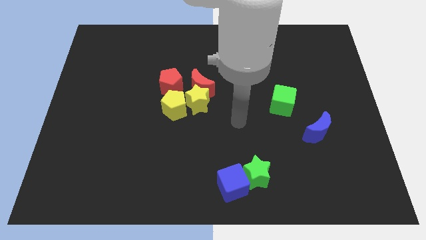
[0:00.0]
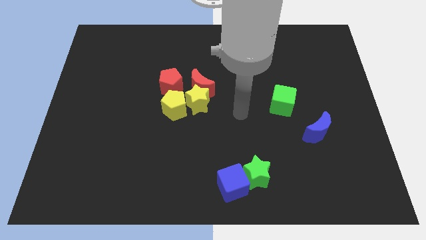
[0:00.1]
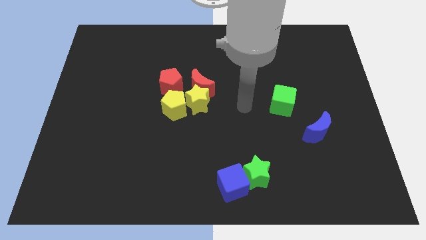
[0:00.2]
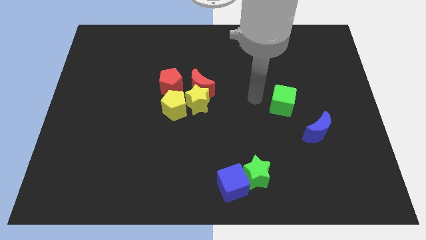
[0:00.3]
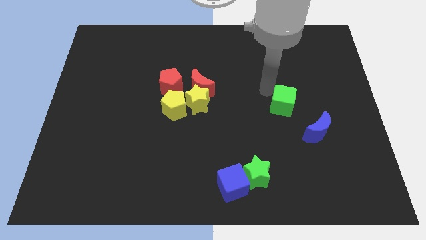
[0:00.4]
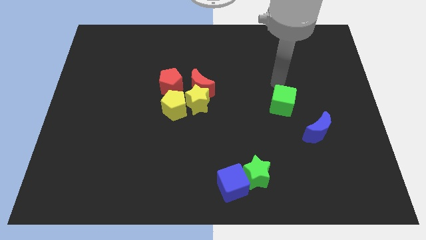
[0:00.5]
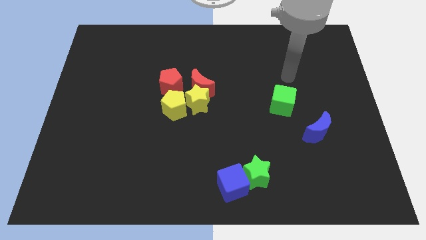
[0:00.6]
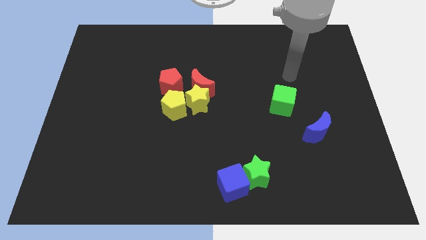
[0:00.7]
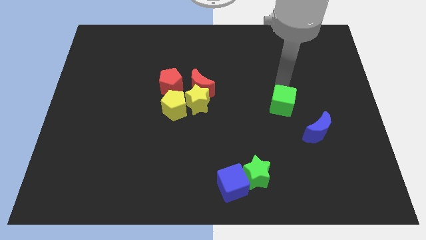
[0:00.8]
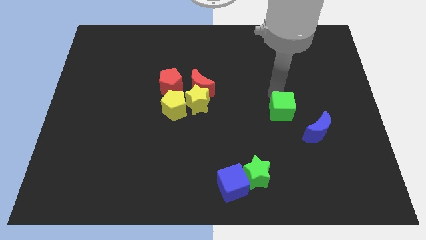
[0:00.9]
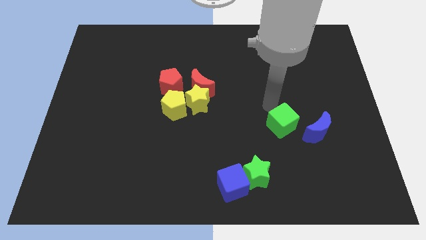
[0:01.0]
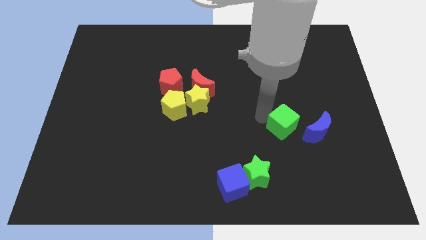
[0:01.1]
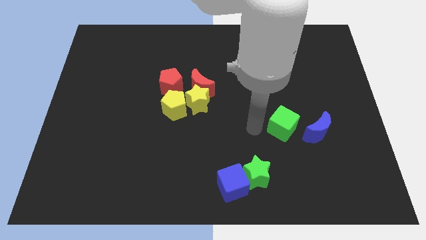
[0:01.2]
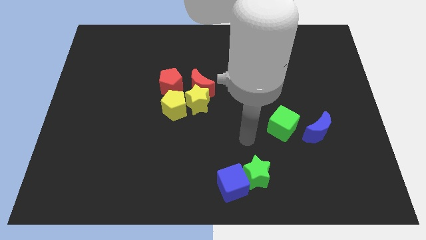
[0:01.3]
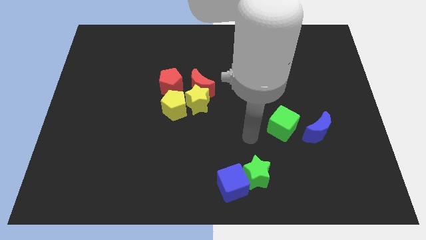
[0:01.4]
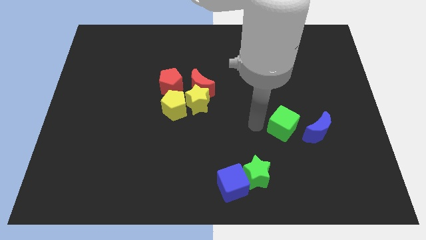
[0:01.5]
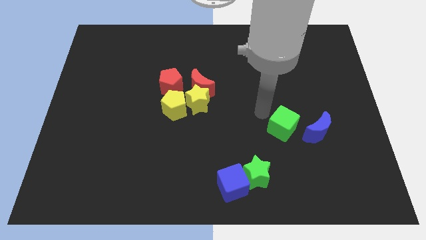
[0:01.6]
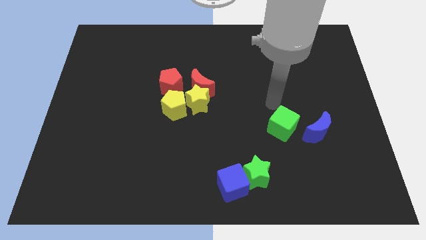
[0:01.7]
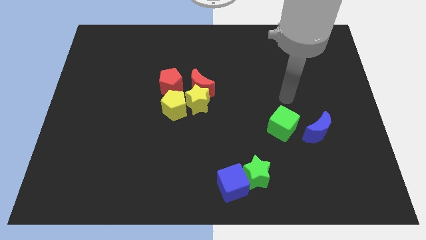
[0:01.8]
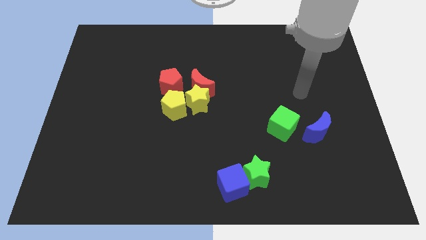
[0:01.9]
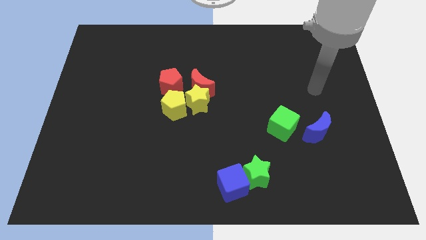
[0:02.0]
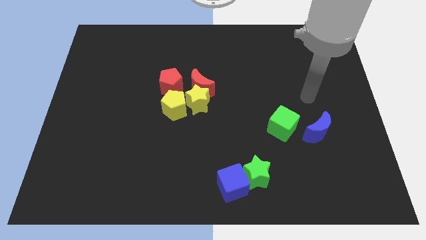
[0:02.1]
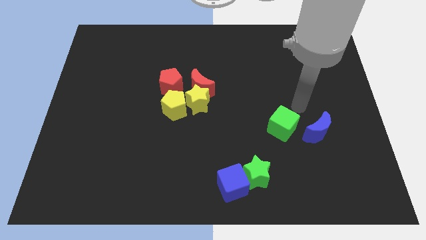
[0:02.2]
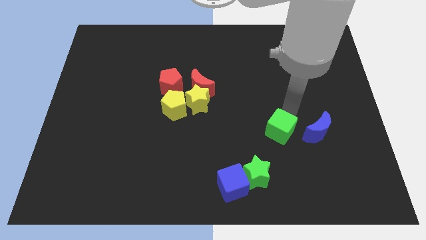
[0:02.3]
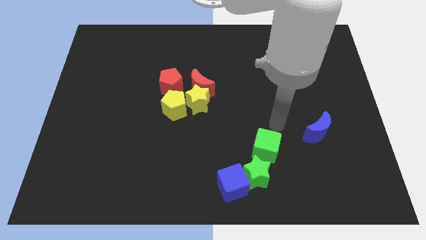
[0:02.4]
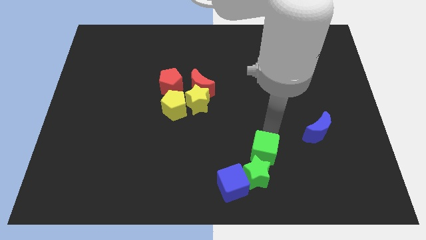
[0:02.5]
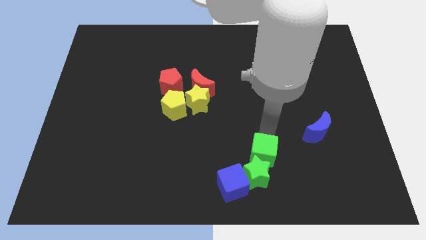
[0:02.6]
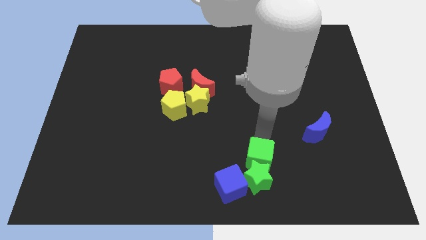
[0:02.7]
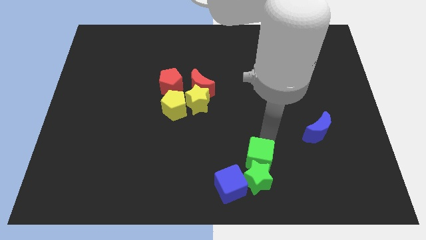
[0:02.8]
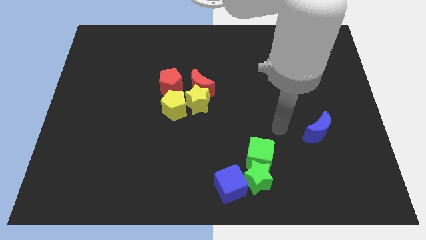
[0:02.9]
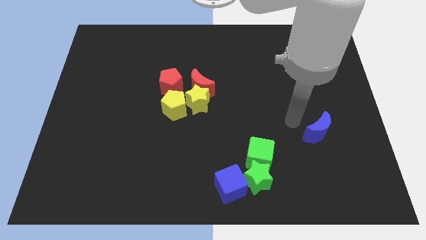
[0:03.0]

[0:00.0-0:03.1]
move the green cube above to the green star

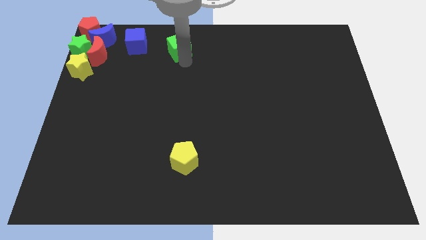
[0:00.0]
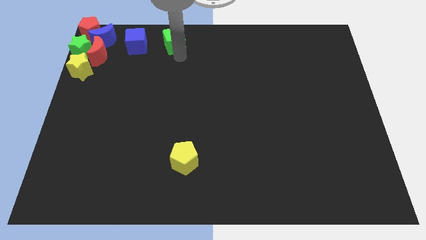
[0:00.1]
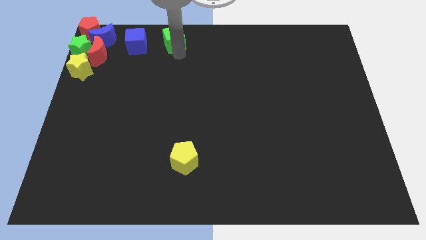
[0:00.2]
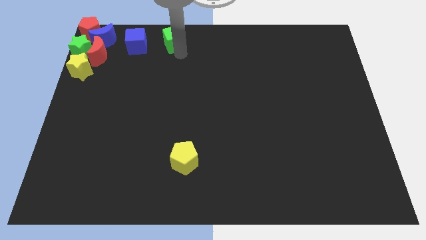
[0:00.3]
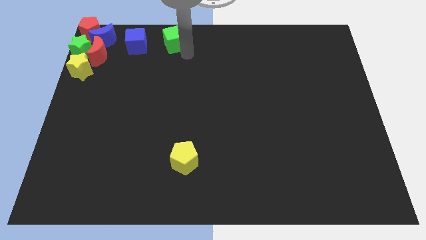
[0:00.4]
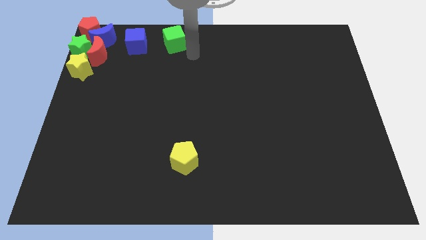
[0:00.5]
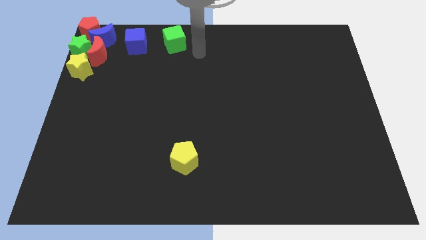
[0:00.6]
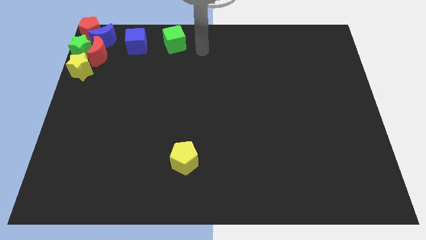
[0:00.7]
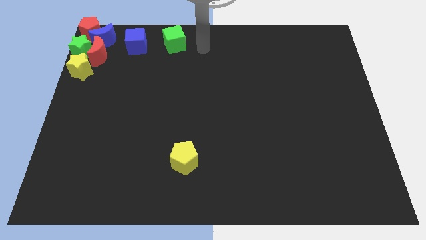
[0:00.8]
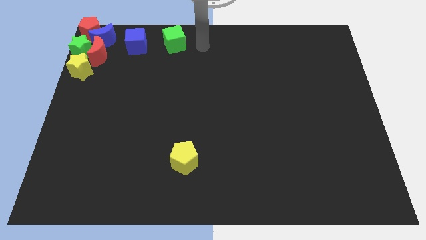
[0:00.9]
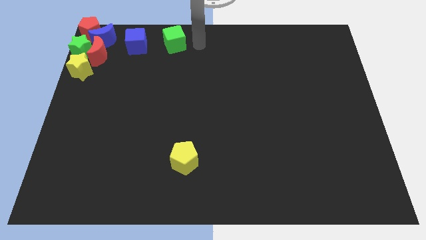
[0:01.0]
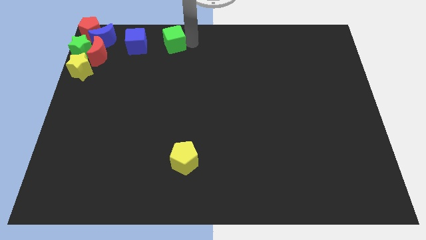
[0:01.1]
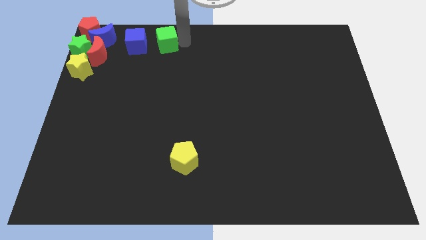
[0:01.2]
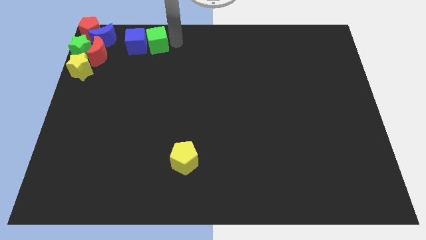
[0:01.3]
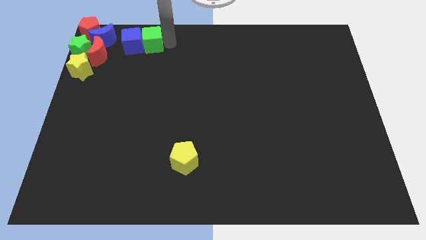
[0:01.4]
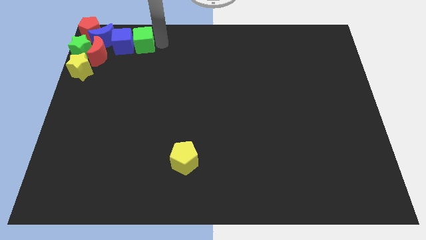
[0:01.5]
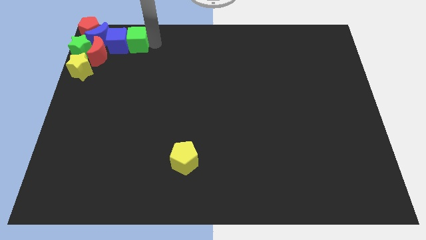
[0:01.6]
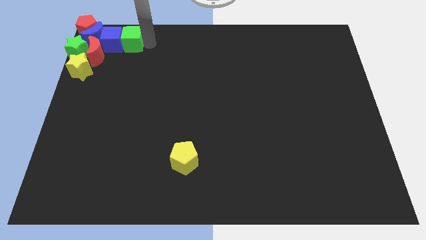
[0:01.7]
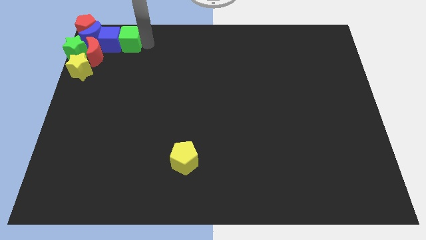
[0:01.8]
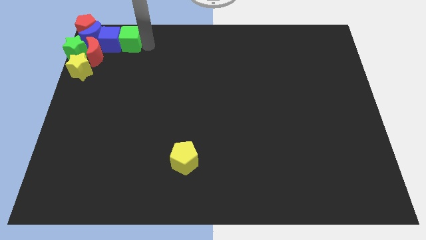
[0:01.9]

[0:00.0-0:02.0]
group up all the blocks except yellow pentagon

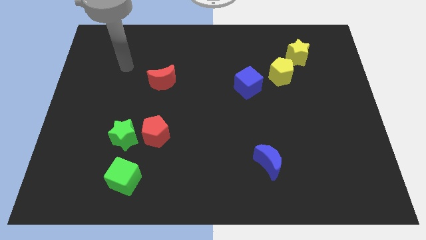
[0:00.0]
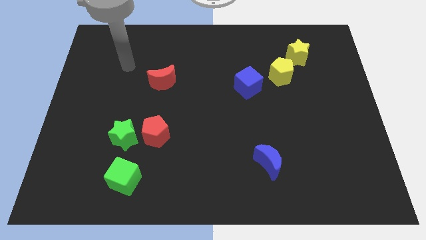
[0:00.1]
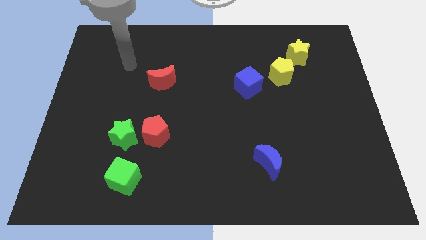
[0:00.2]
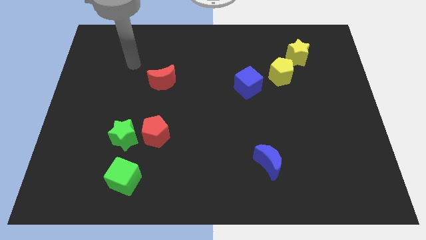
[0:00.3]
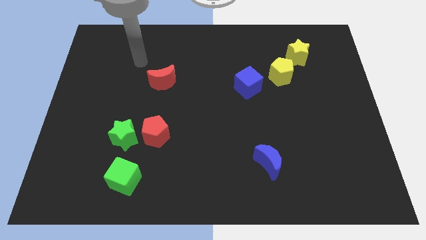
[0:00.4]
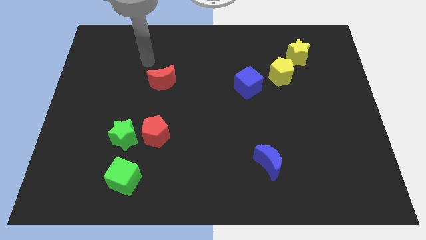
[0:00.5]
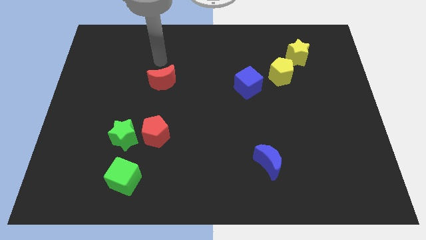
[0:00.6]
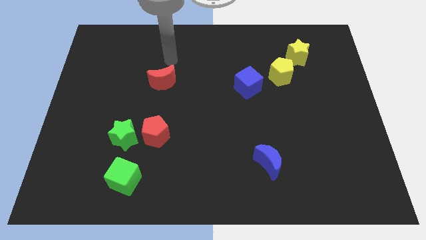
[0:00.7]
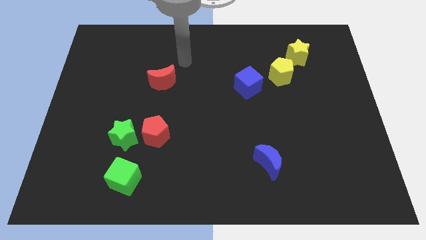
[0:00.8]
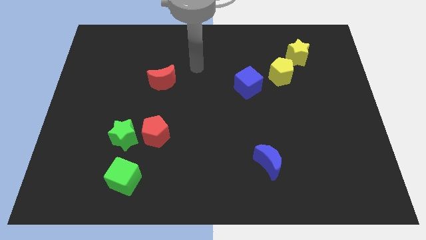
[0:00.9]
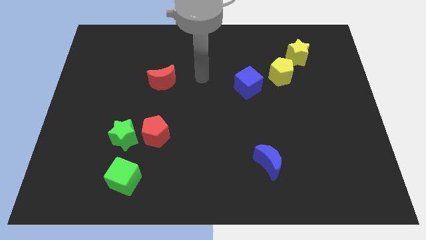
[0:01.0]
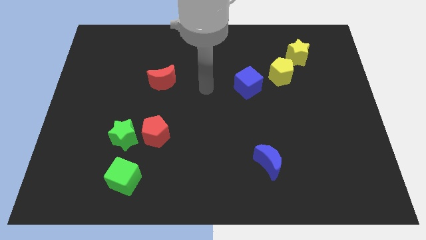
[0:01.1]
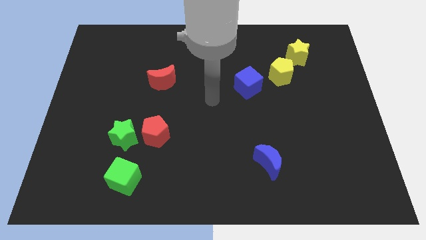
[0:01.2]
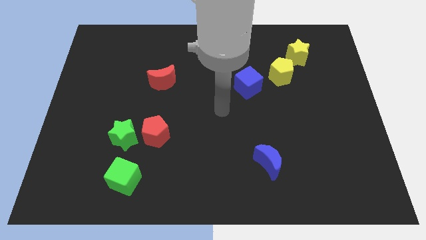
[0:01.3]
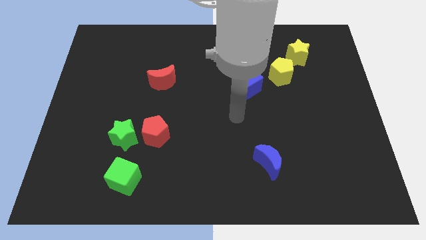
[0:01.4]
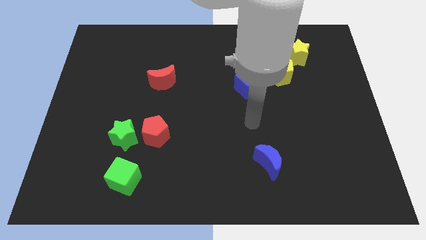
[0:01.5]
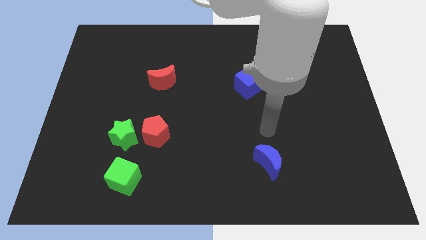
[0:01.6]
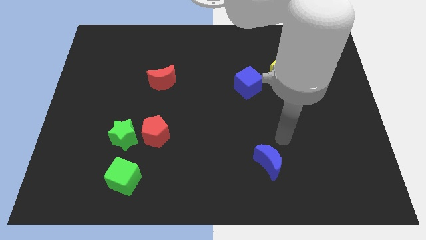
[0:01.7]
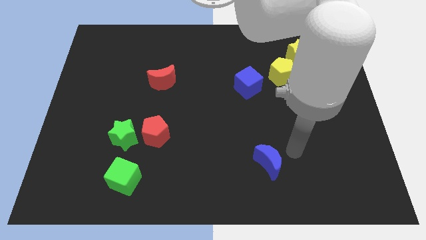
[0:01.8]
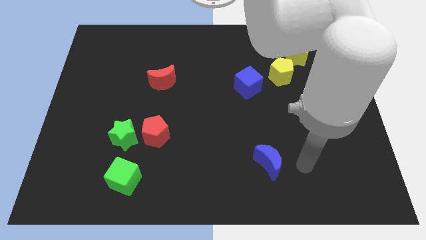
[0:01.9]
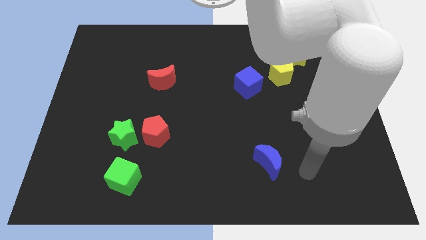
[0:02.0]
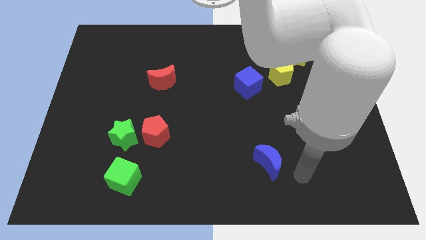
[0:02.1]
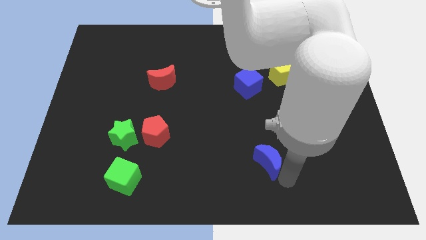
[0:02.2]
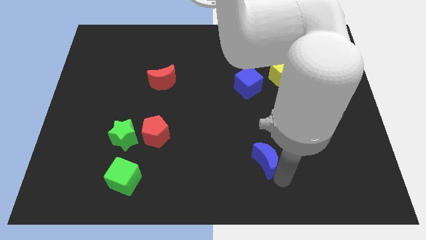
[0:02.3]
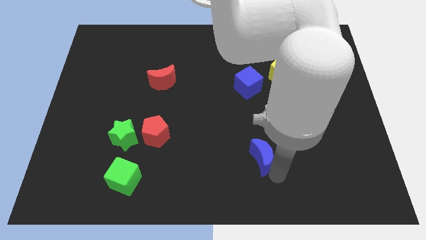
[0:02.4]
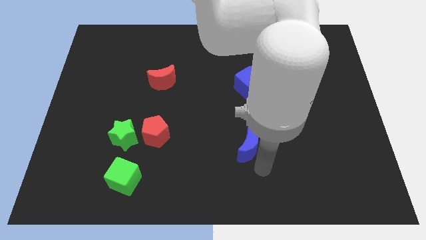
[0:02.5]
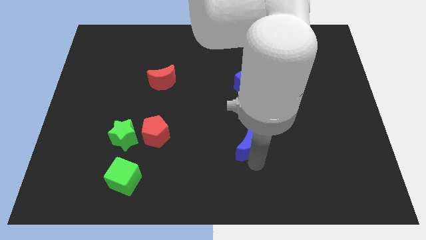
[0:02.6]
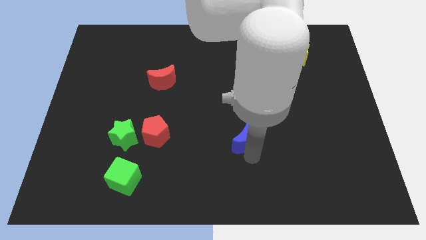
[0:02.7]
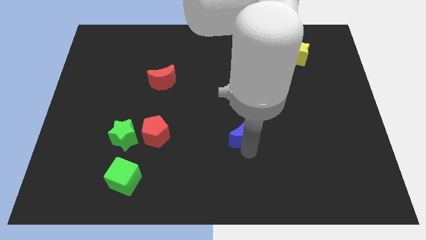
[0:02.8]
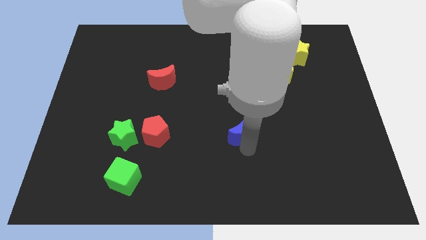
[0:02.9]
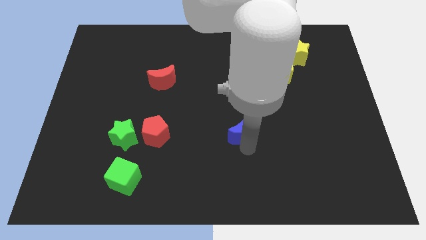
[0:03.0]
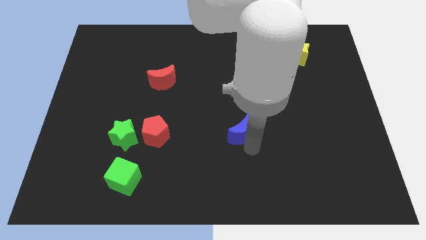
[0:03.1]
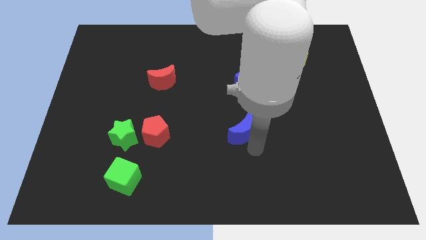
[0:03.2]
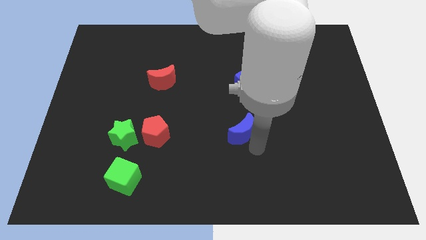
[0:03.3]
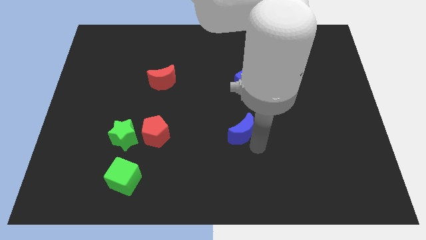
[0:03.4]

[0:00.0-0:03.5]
place the blue moon parallel right to the red pentagon

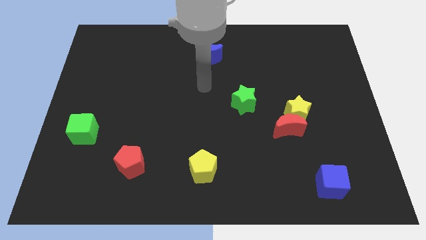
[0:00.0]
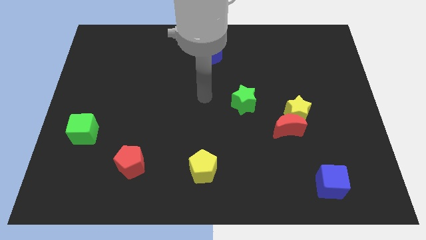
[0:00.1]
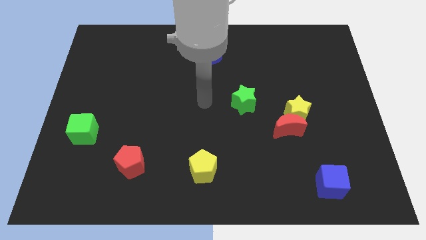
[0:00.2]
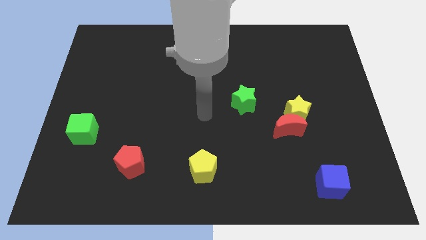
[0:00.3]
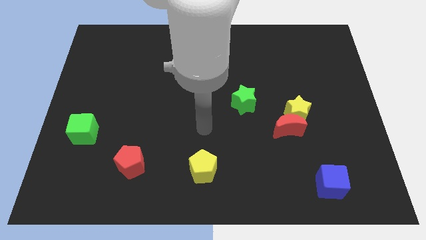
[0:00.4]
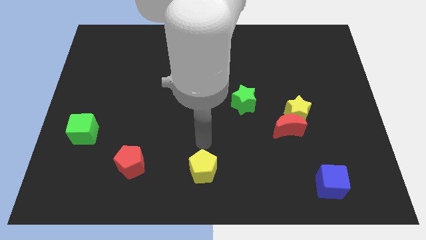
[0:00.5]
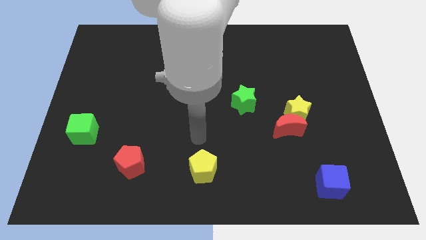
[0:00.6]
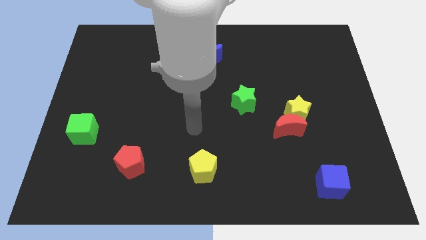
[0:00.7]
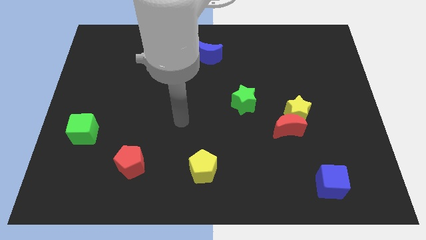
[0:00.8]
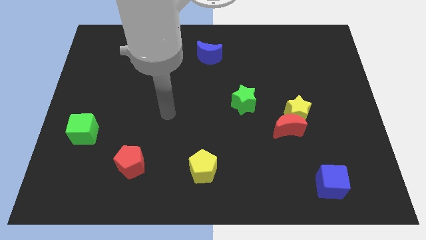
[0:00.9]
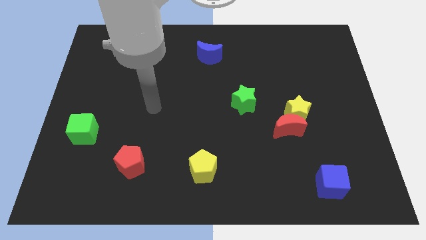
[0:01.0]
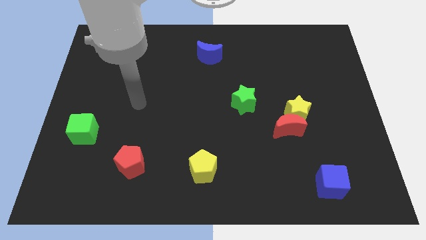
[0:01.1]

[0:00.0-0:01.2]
move your arm away from the blue moon
